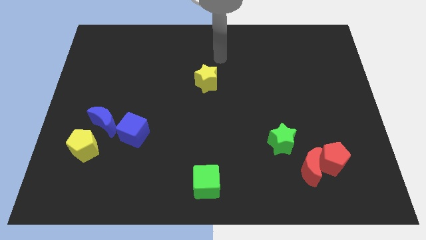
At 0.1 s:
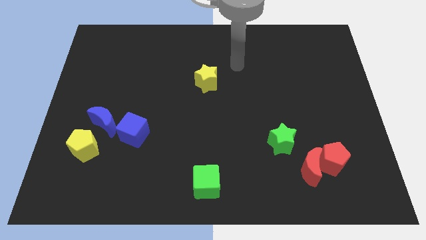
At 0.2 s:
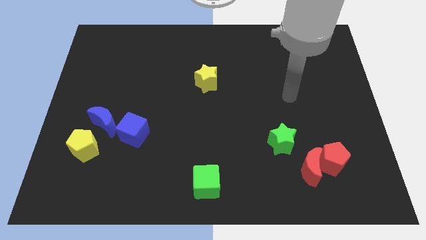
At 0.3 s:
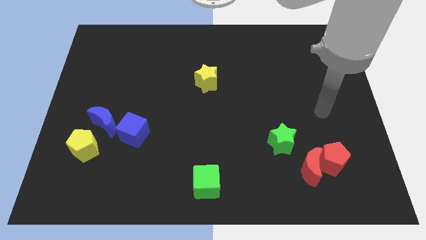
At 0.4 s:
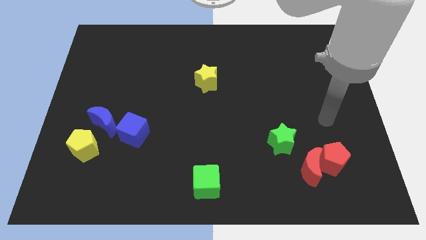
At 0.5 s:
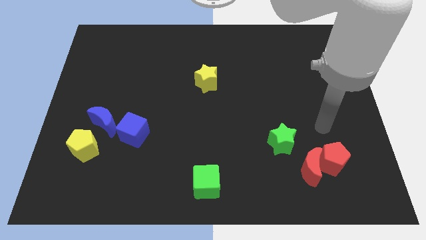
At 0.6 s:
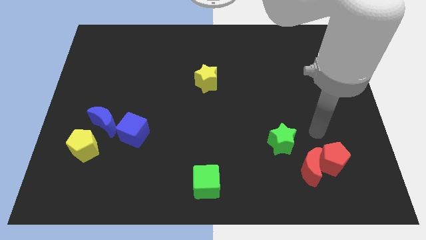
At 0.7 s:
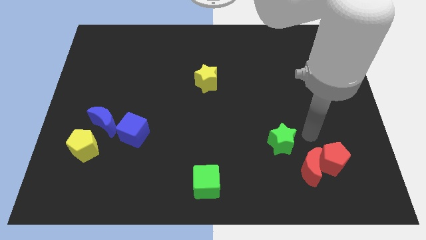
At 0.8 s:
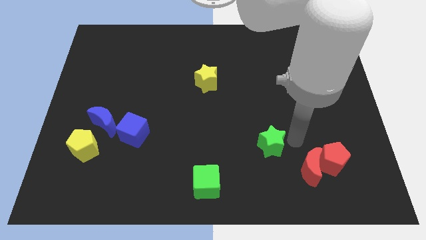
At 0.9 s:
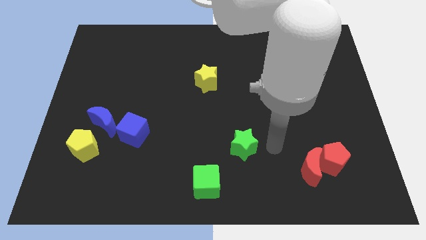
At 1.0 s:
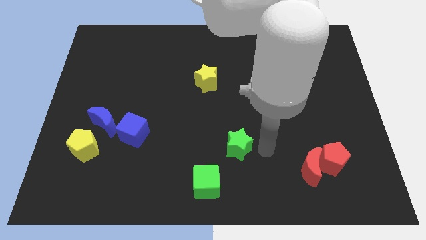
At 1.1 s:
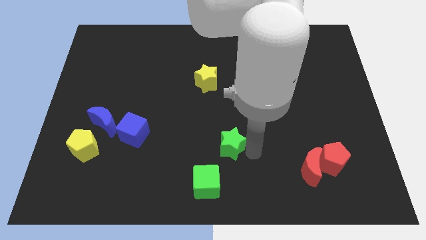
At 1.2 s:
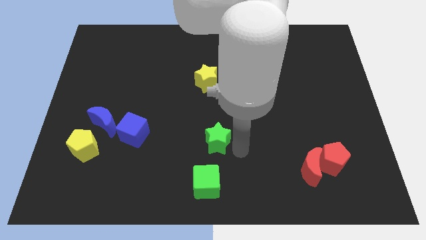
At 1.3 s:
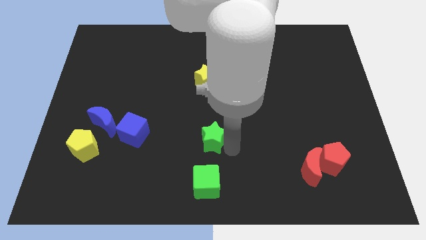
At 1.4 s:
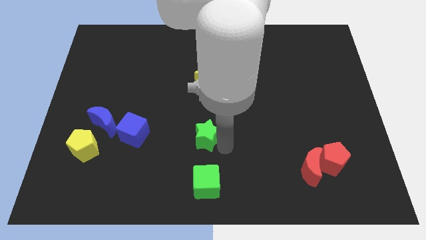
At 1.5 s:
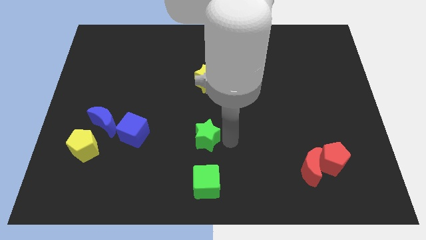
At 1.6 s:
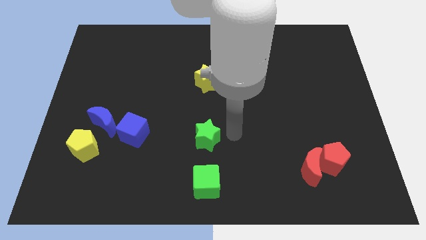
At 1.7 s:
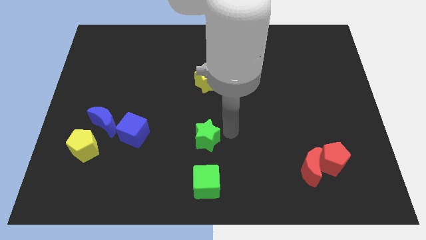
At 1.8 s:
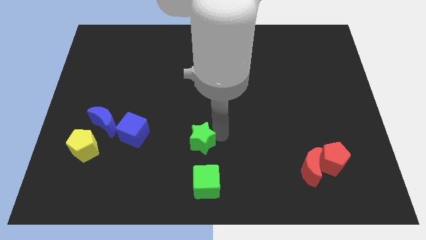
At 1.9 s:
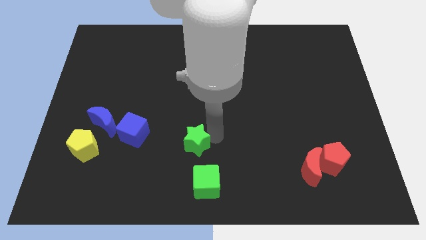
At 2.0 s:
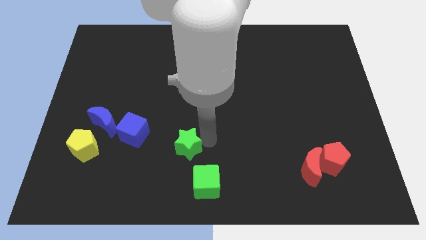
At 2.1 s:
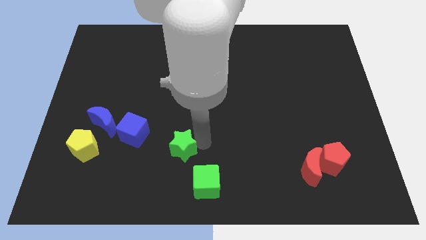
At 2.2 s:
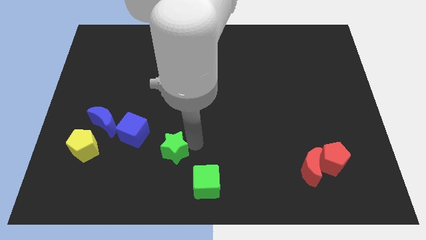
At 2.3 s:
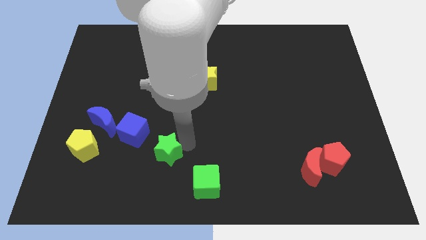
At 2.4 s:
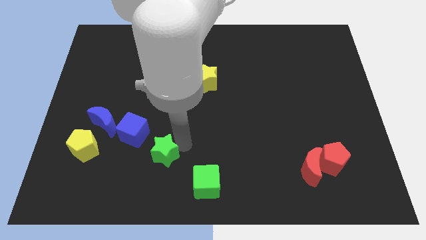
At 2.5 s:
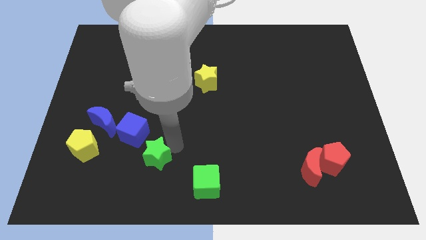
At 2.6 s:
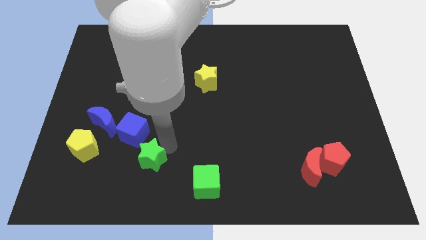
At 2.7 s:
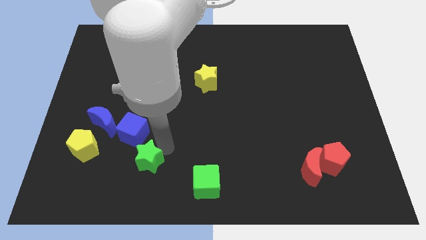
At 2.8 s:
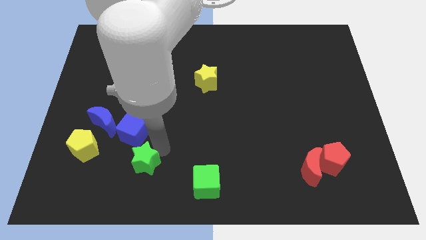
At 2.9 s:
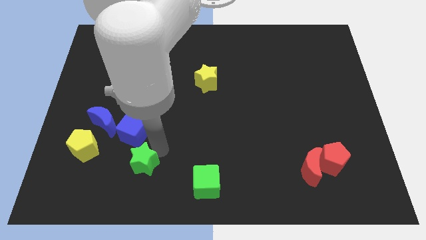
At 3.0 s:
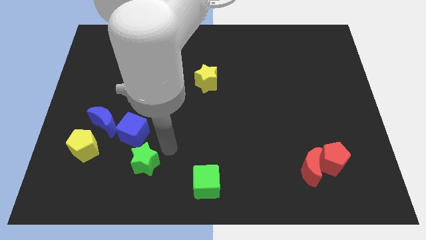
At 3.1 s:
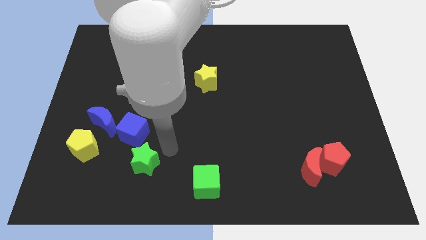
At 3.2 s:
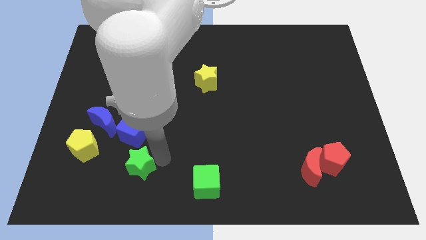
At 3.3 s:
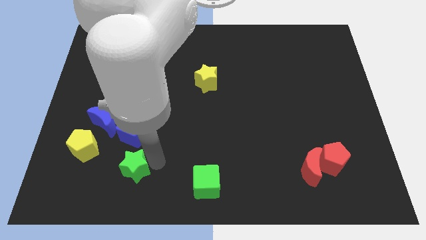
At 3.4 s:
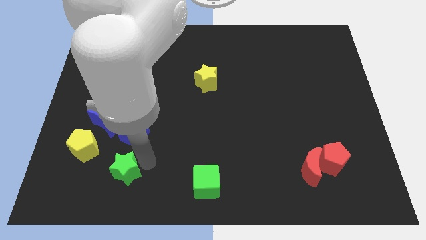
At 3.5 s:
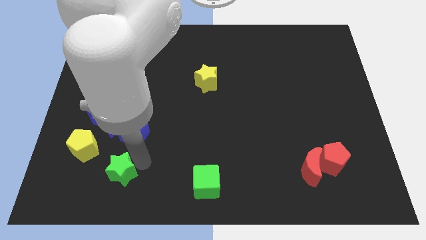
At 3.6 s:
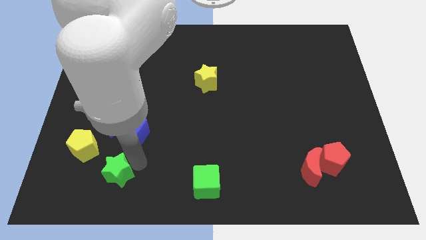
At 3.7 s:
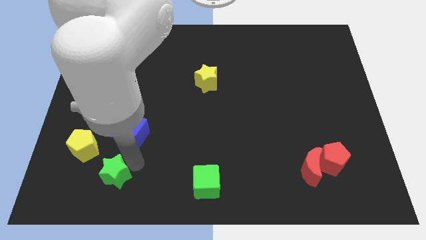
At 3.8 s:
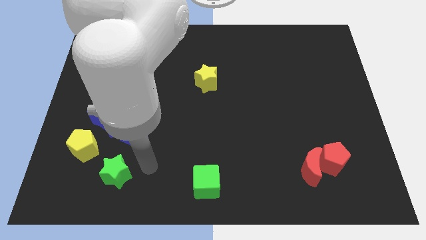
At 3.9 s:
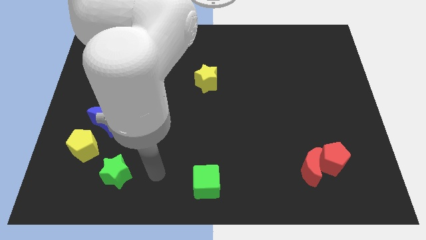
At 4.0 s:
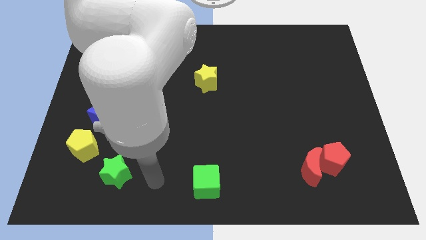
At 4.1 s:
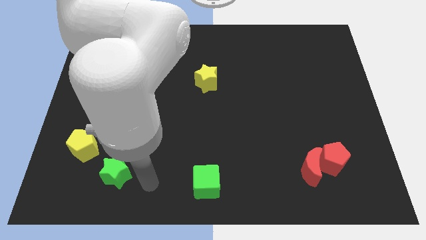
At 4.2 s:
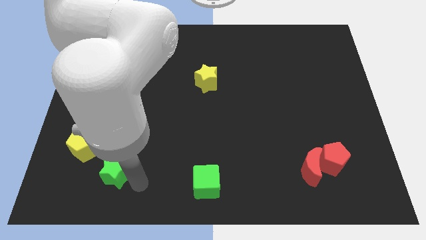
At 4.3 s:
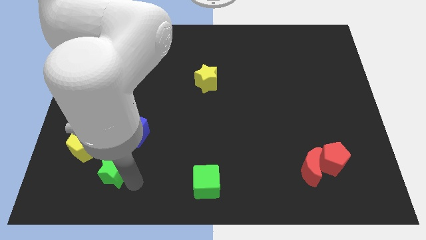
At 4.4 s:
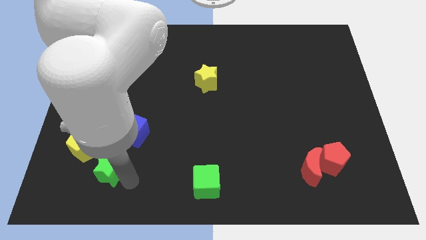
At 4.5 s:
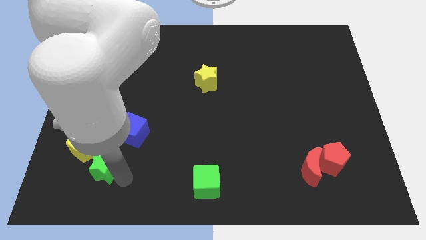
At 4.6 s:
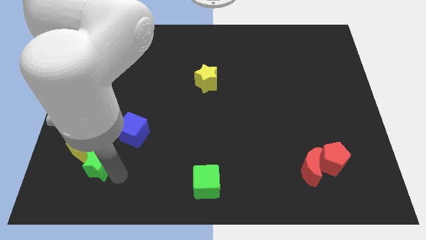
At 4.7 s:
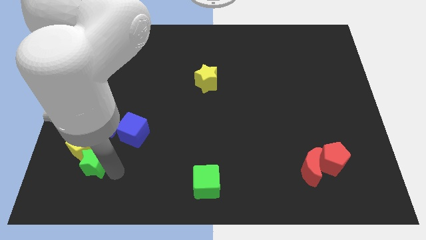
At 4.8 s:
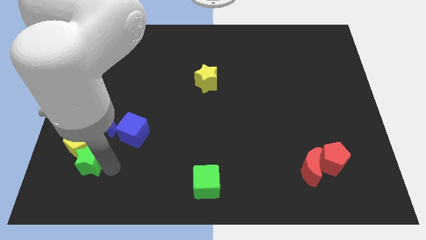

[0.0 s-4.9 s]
push the green star towards the yellow pentagon

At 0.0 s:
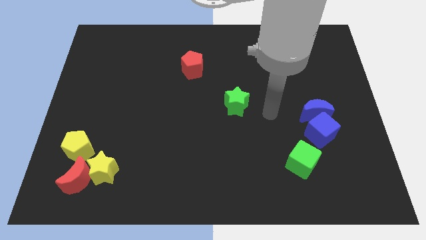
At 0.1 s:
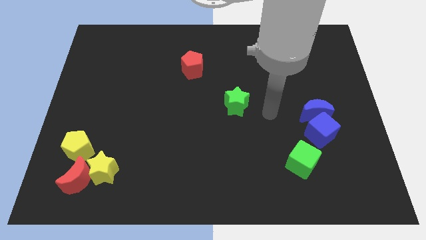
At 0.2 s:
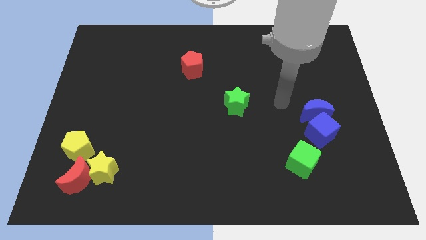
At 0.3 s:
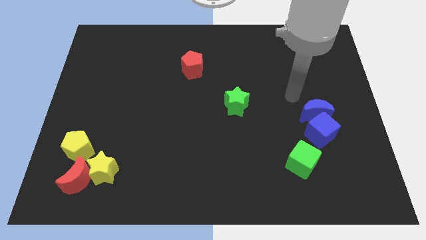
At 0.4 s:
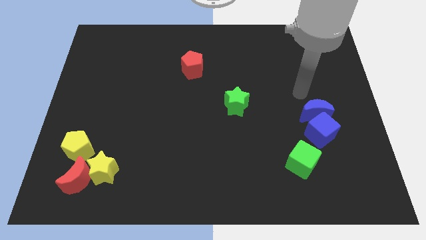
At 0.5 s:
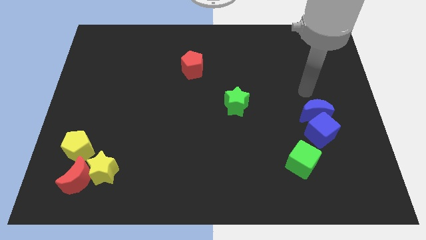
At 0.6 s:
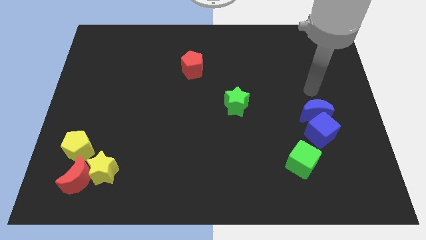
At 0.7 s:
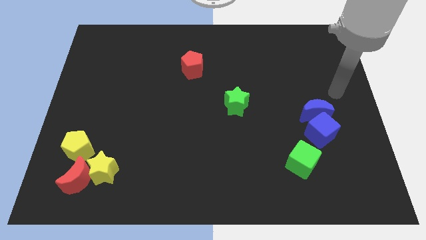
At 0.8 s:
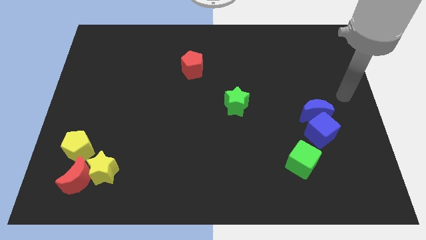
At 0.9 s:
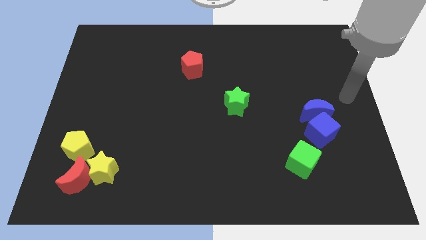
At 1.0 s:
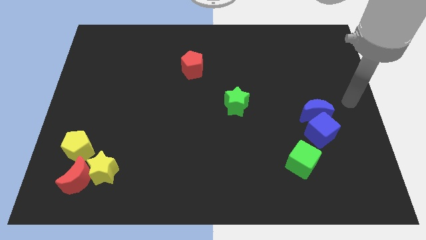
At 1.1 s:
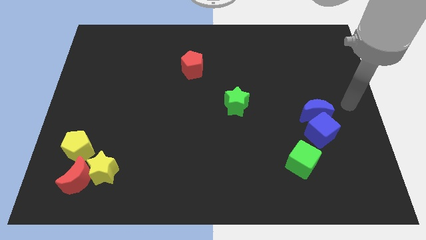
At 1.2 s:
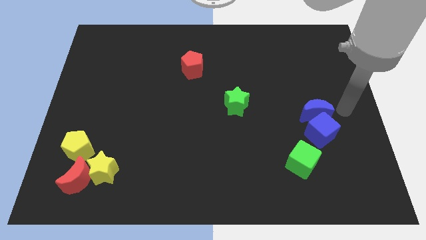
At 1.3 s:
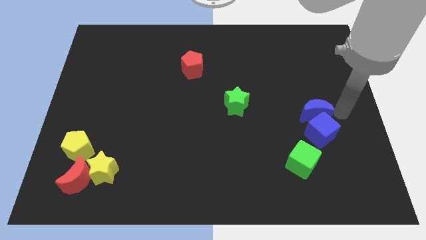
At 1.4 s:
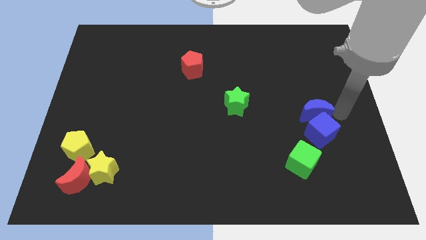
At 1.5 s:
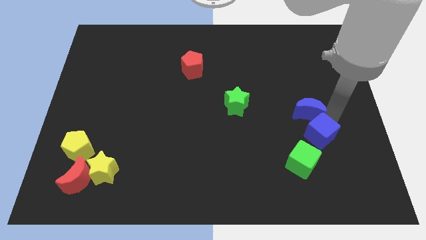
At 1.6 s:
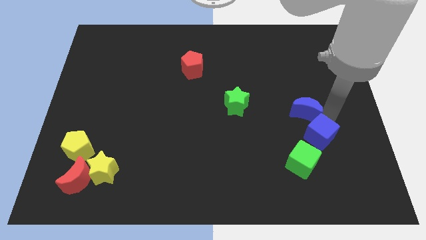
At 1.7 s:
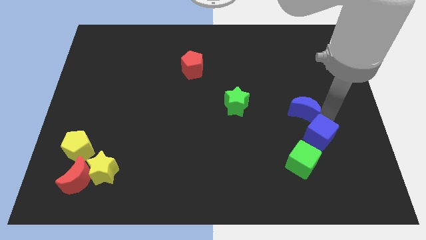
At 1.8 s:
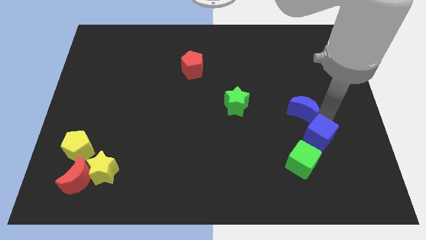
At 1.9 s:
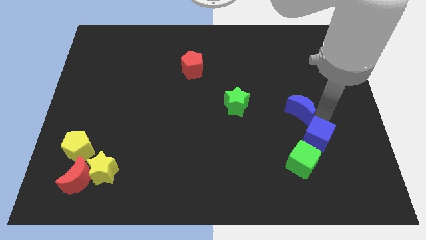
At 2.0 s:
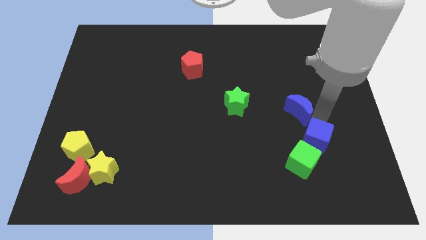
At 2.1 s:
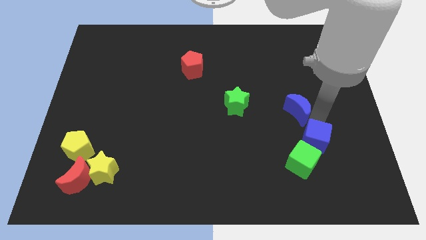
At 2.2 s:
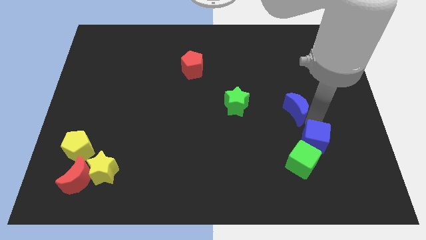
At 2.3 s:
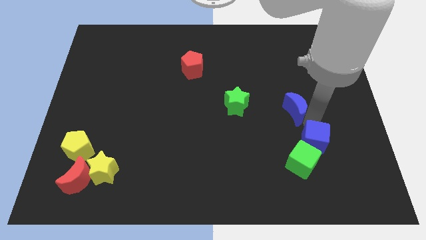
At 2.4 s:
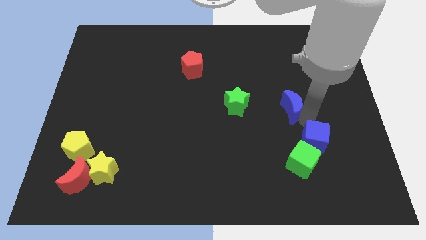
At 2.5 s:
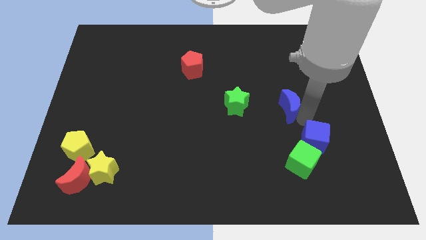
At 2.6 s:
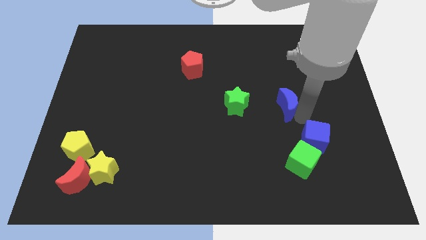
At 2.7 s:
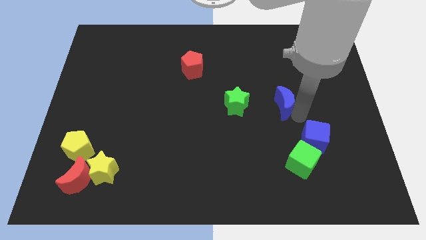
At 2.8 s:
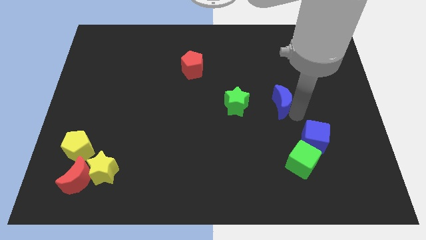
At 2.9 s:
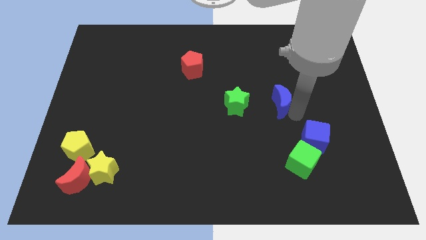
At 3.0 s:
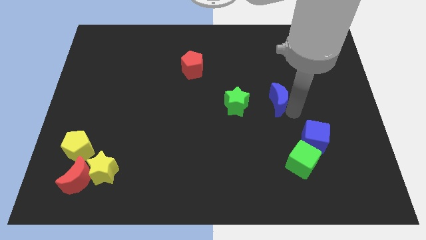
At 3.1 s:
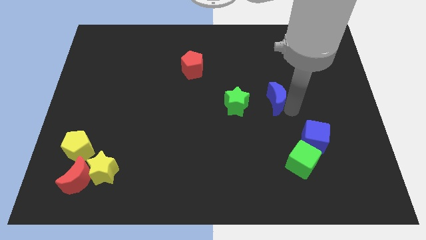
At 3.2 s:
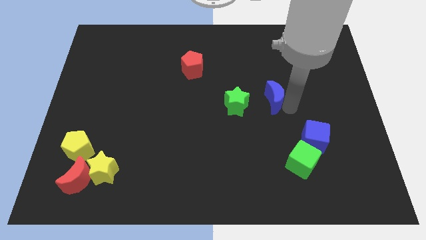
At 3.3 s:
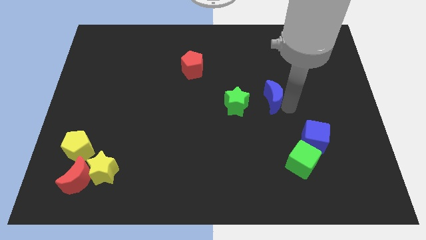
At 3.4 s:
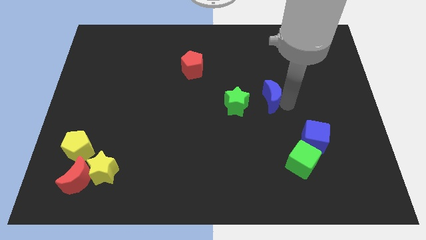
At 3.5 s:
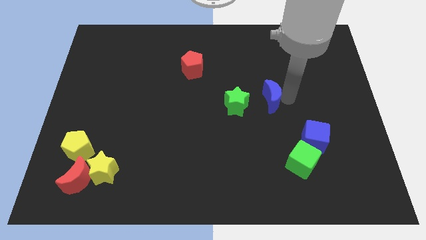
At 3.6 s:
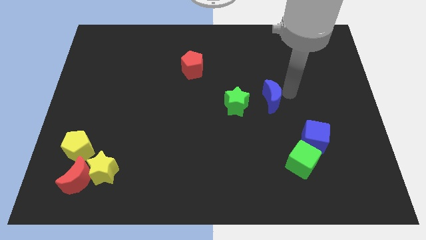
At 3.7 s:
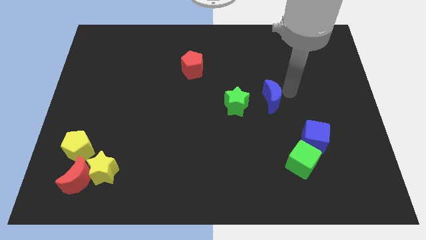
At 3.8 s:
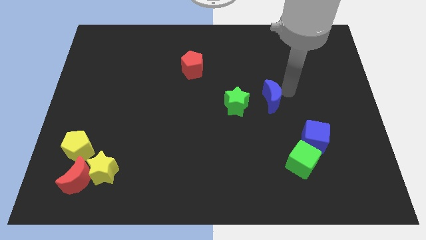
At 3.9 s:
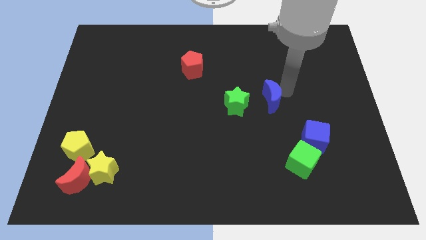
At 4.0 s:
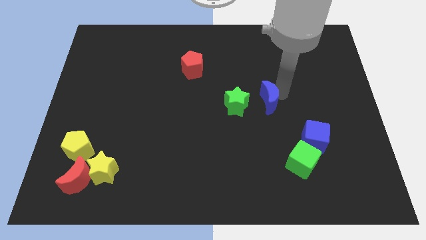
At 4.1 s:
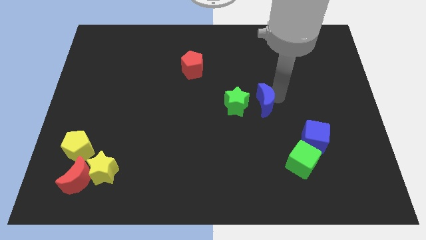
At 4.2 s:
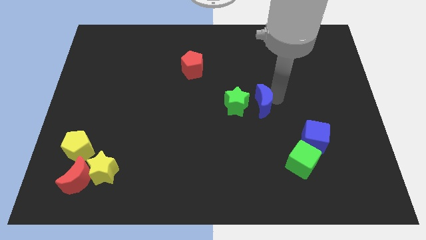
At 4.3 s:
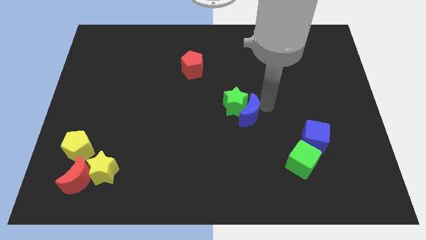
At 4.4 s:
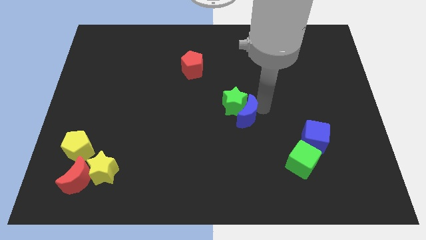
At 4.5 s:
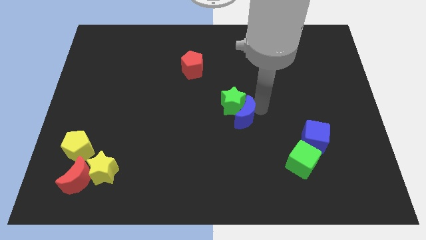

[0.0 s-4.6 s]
put the blue moon towards the green star
